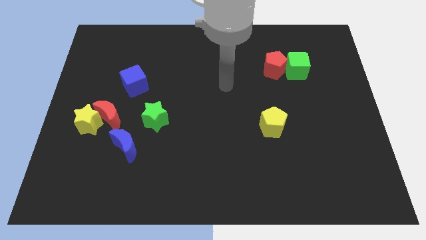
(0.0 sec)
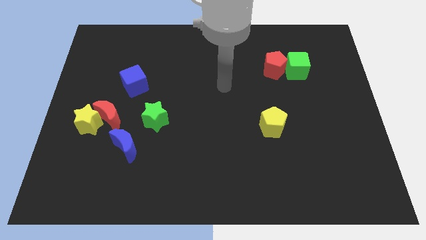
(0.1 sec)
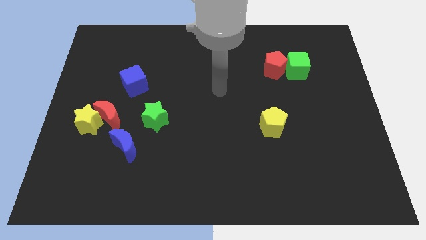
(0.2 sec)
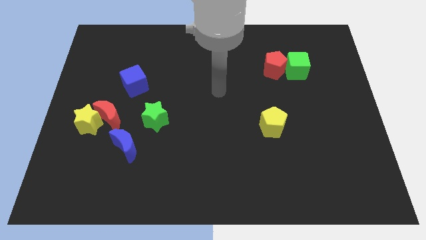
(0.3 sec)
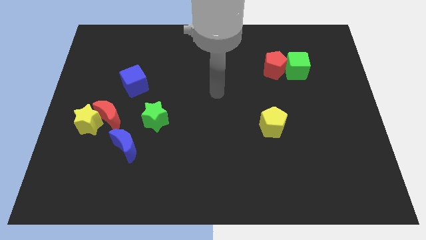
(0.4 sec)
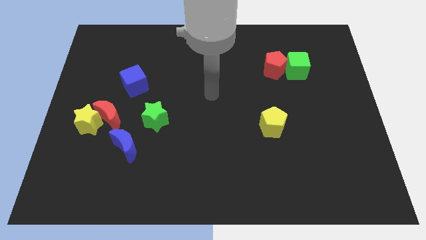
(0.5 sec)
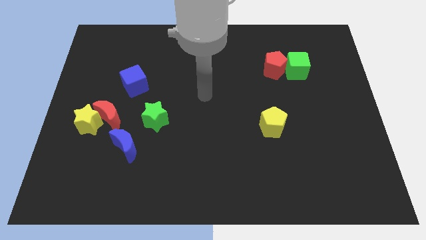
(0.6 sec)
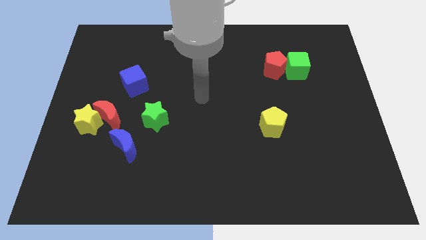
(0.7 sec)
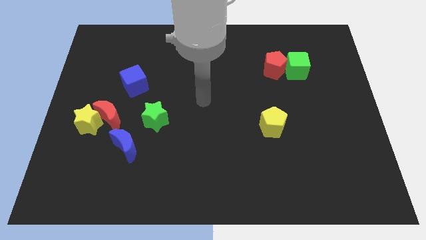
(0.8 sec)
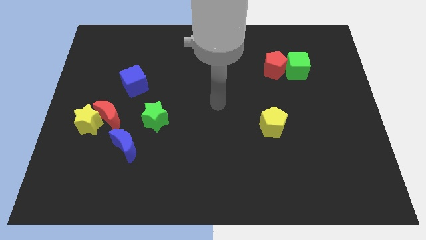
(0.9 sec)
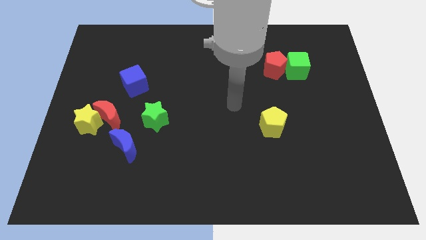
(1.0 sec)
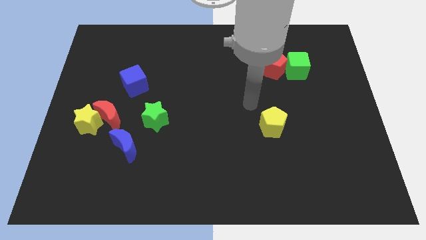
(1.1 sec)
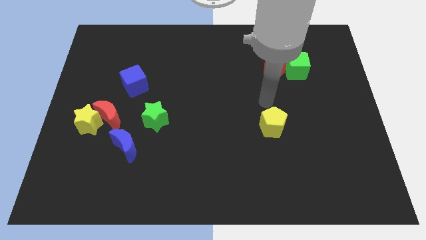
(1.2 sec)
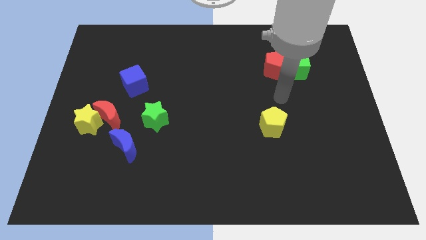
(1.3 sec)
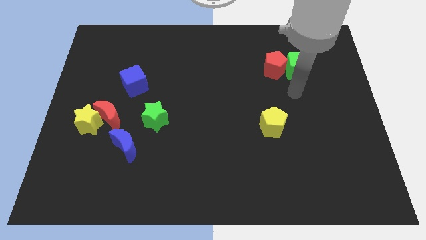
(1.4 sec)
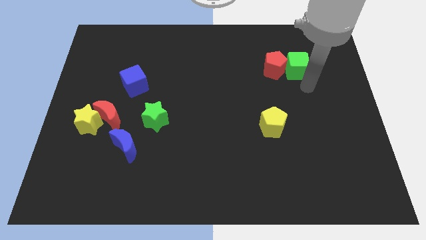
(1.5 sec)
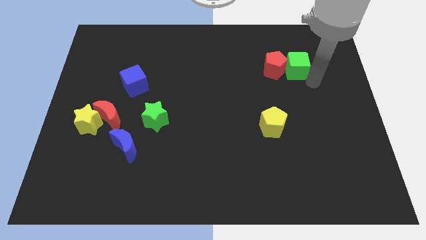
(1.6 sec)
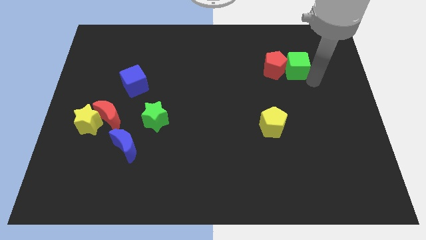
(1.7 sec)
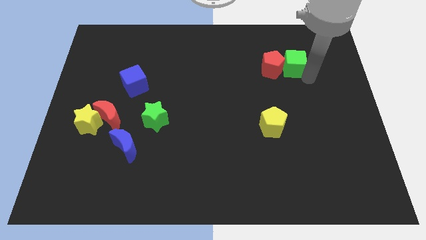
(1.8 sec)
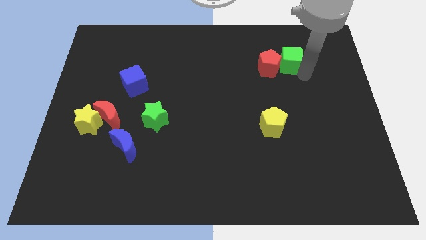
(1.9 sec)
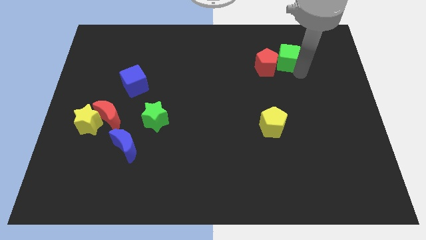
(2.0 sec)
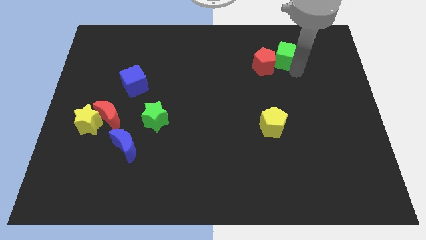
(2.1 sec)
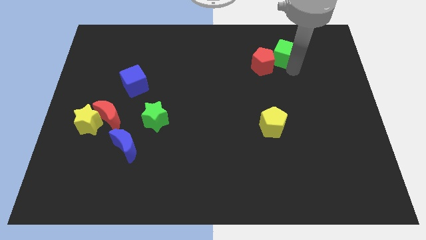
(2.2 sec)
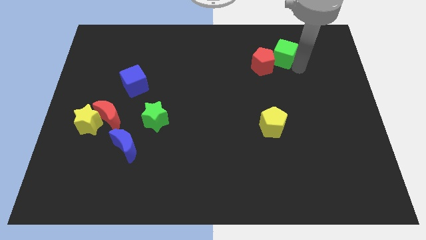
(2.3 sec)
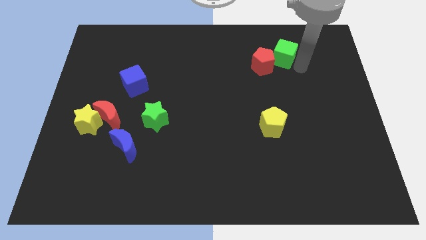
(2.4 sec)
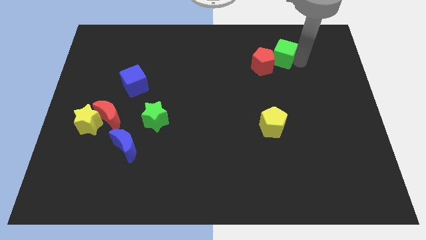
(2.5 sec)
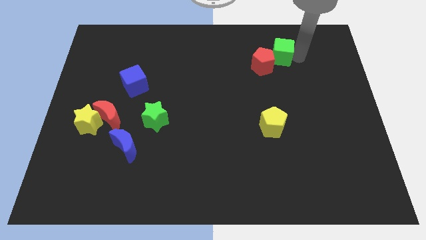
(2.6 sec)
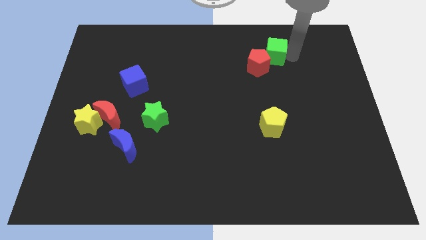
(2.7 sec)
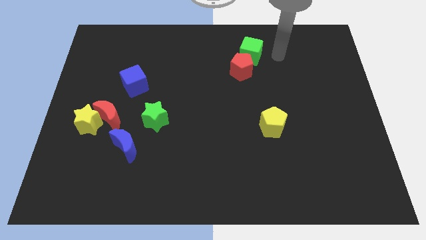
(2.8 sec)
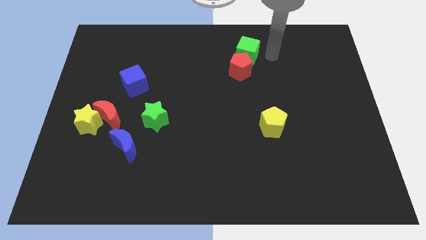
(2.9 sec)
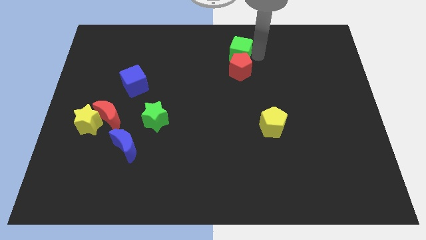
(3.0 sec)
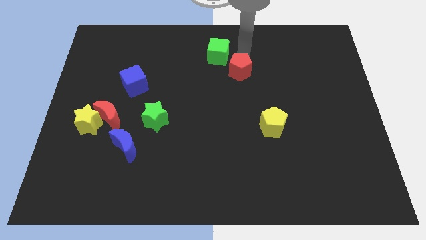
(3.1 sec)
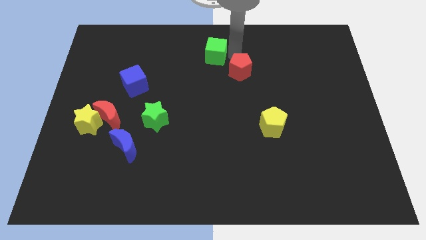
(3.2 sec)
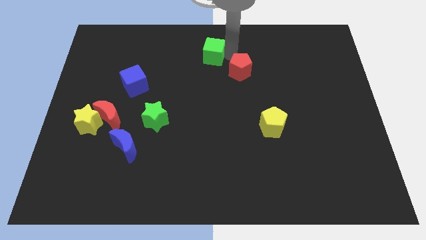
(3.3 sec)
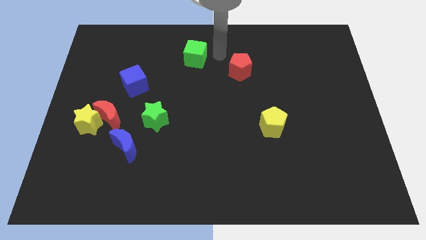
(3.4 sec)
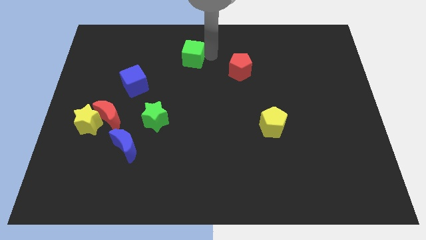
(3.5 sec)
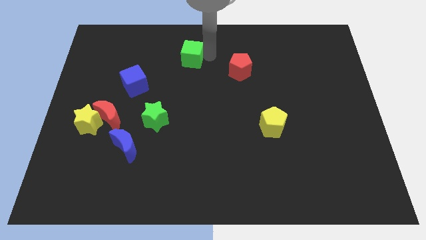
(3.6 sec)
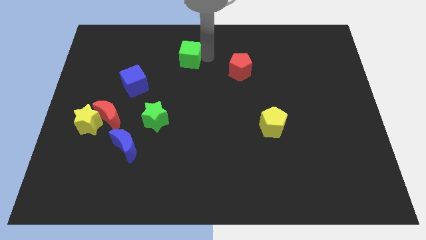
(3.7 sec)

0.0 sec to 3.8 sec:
separate the green cube from red pentagon

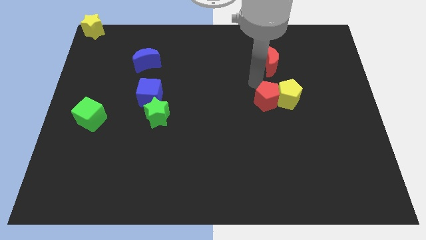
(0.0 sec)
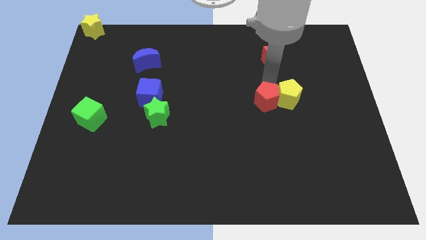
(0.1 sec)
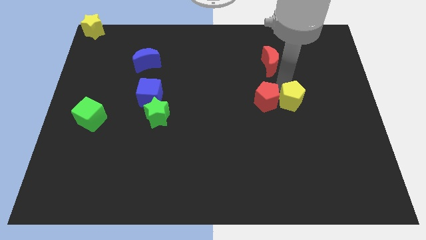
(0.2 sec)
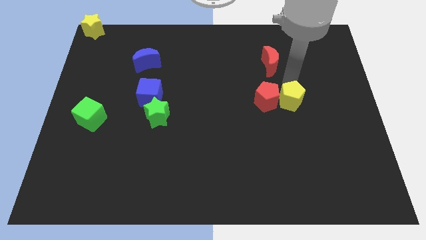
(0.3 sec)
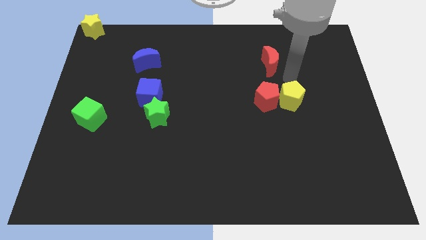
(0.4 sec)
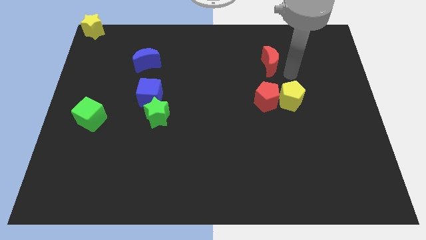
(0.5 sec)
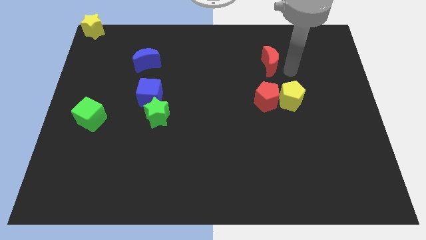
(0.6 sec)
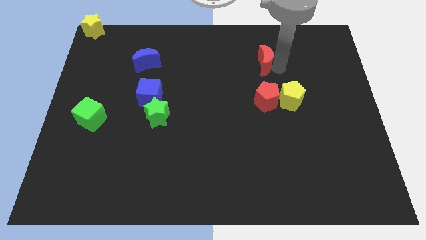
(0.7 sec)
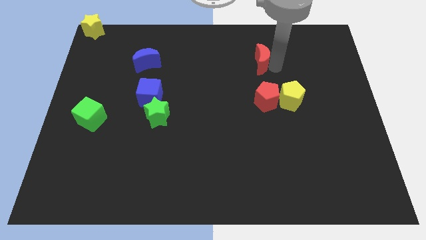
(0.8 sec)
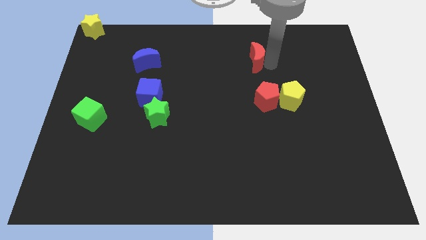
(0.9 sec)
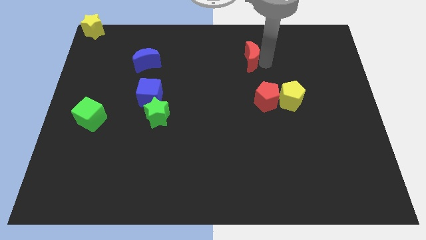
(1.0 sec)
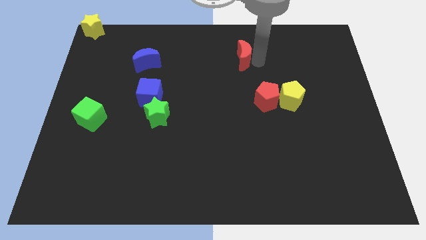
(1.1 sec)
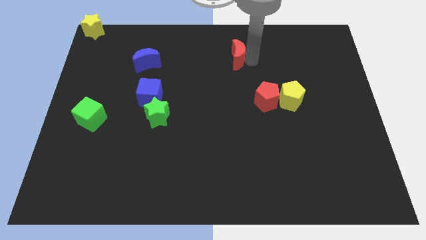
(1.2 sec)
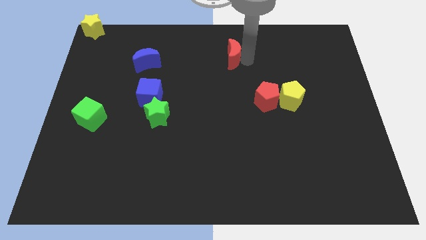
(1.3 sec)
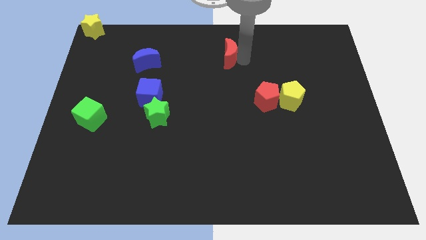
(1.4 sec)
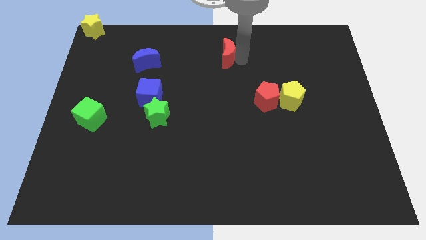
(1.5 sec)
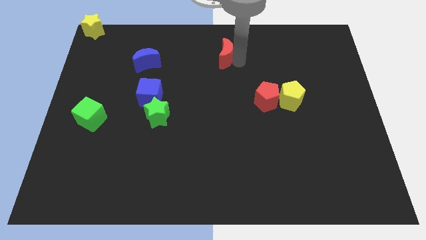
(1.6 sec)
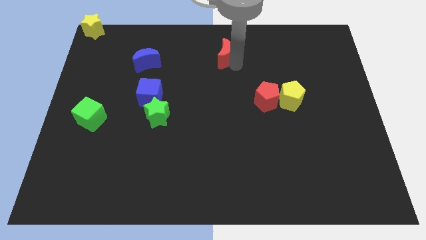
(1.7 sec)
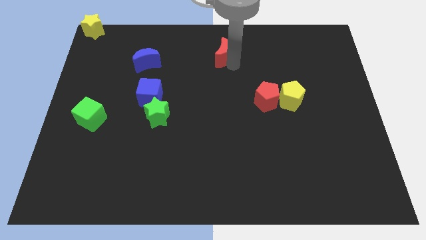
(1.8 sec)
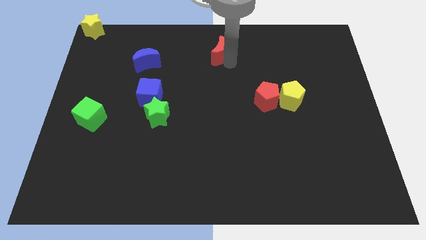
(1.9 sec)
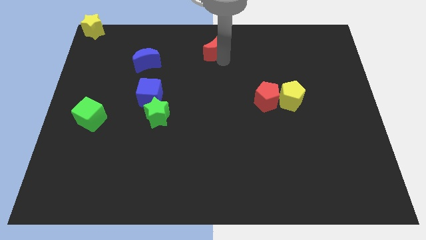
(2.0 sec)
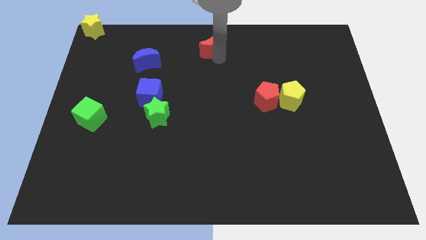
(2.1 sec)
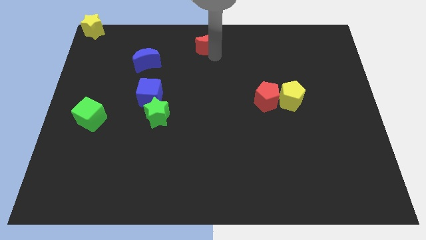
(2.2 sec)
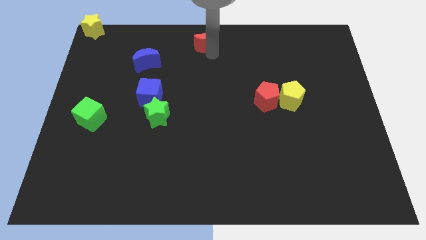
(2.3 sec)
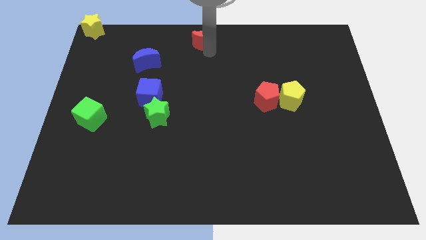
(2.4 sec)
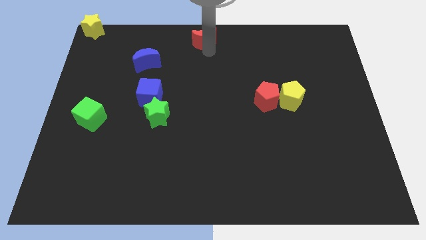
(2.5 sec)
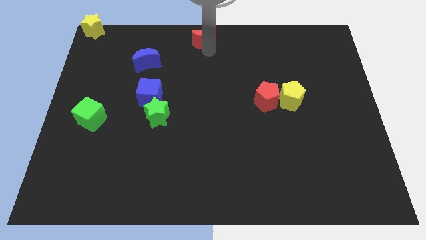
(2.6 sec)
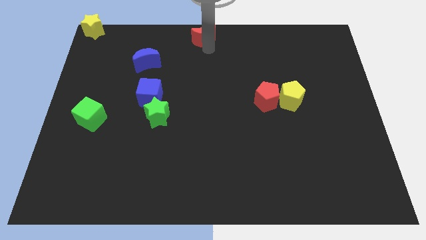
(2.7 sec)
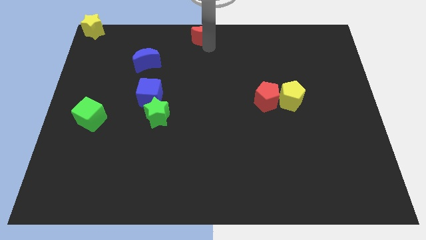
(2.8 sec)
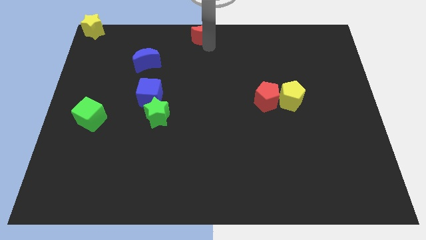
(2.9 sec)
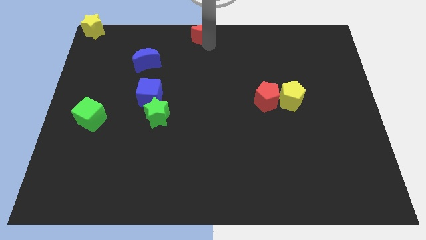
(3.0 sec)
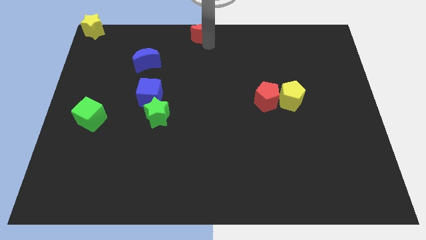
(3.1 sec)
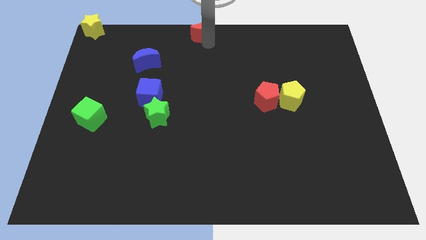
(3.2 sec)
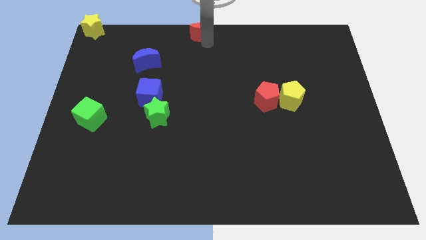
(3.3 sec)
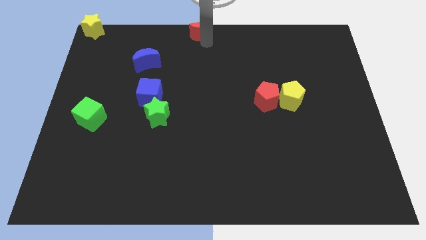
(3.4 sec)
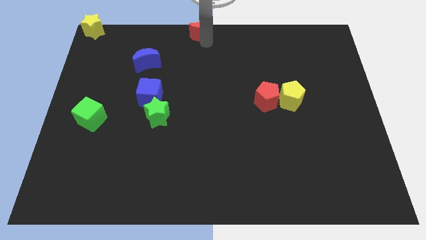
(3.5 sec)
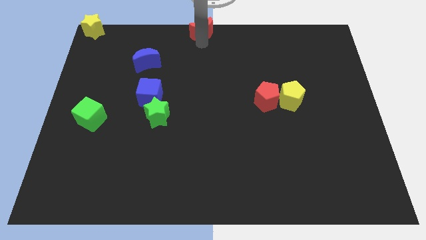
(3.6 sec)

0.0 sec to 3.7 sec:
place the red moon diagonally to the blue moon

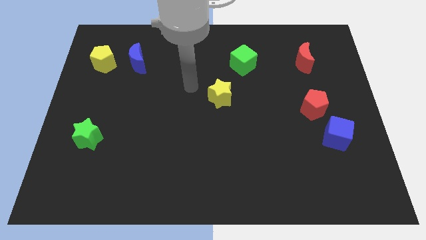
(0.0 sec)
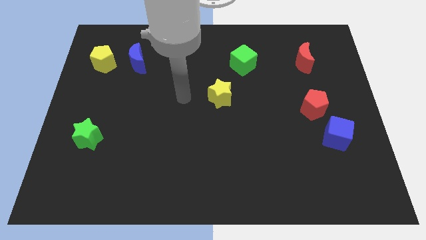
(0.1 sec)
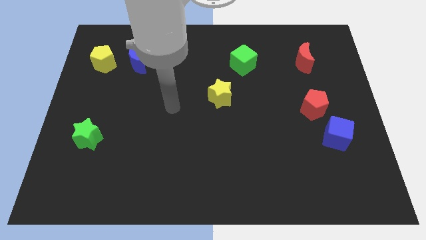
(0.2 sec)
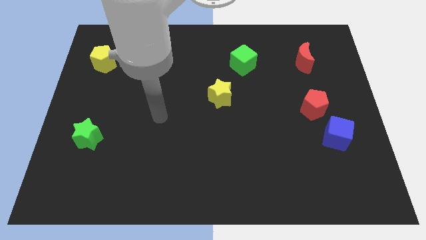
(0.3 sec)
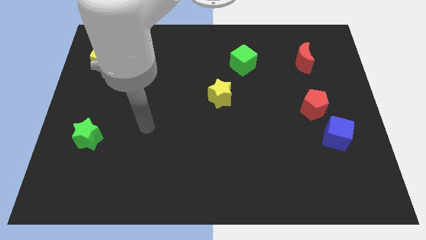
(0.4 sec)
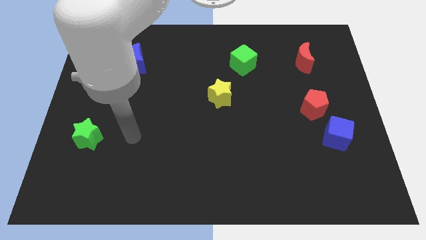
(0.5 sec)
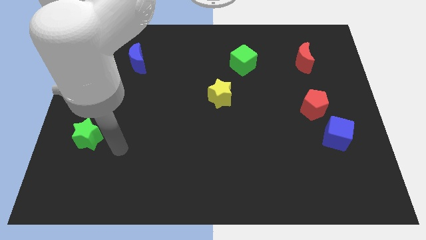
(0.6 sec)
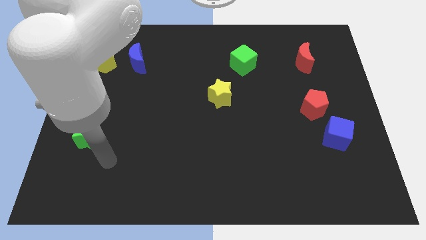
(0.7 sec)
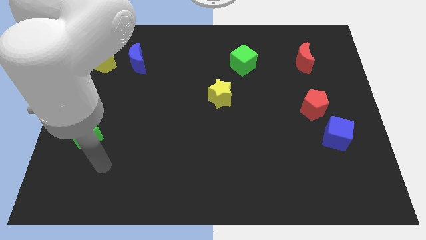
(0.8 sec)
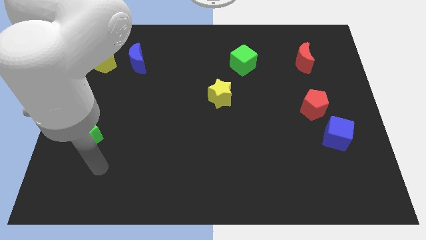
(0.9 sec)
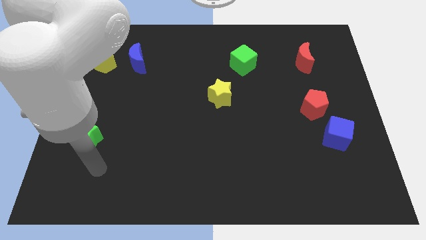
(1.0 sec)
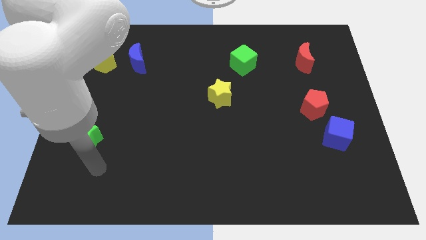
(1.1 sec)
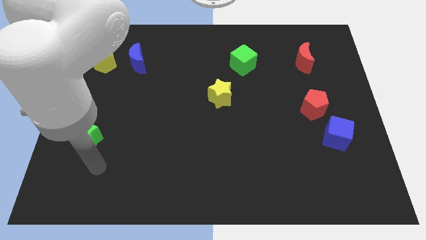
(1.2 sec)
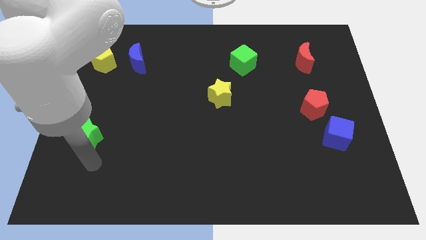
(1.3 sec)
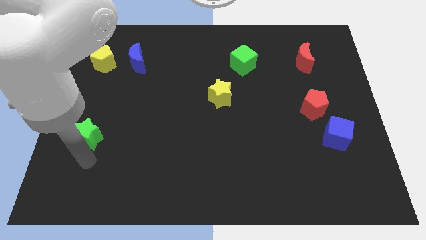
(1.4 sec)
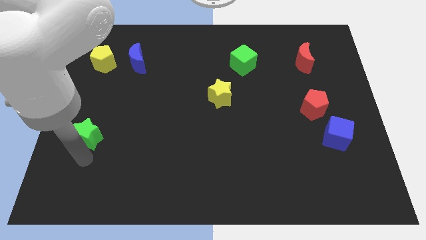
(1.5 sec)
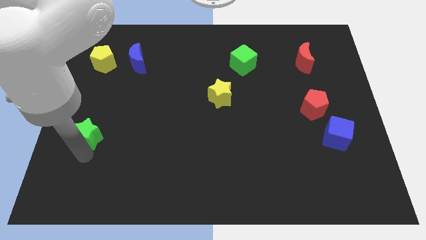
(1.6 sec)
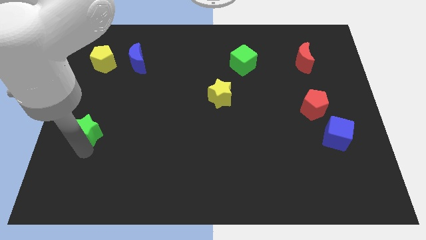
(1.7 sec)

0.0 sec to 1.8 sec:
touch the green star
